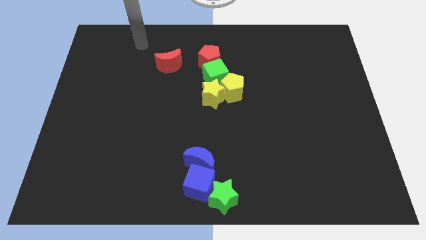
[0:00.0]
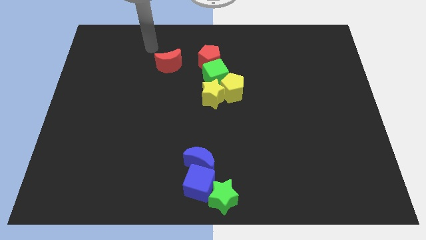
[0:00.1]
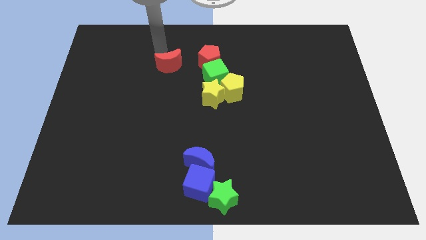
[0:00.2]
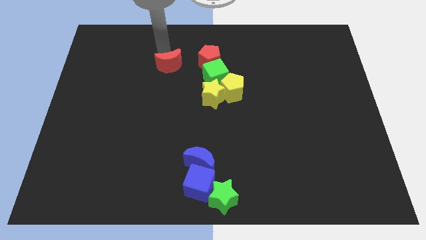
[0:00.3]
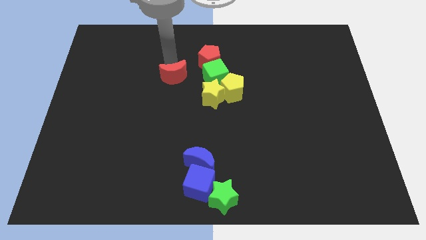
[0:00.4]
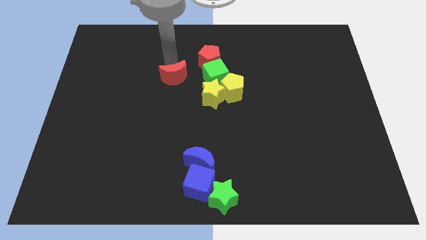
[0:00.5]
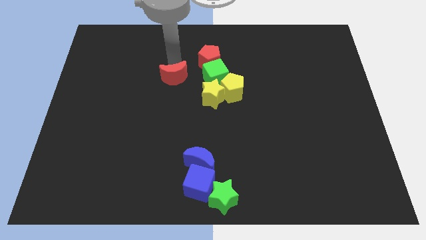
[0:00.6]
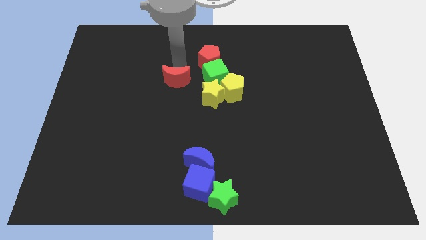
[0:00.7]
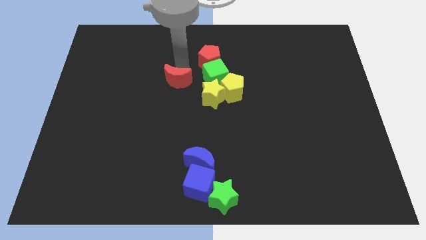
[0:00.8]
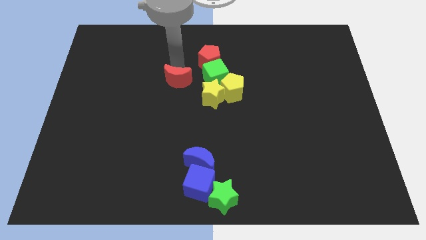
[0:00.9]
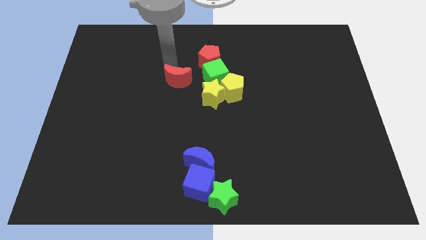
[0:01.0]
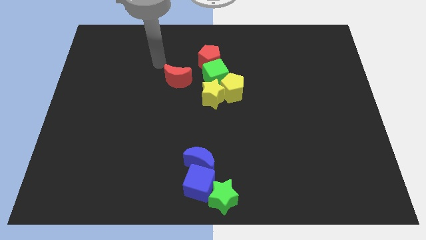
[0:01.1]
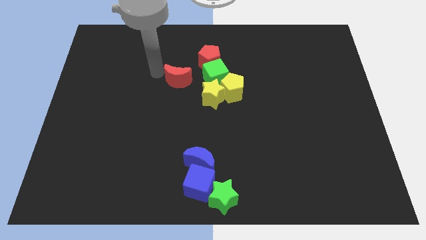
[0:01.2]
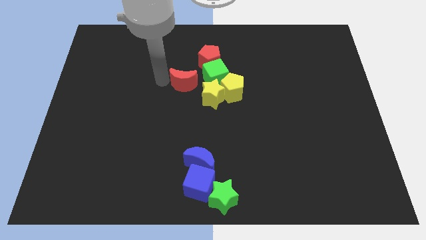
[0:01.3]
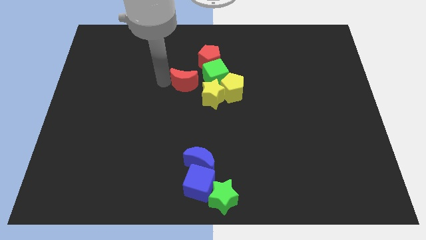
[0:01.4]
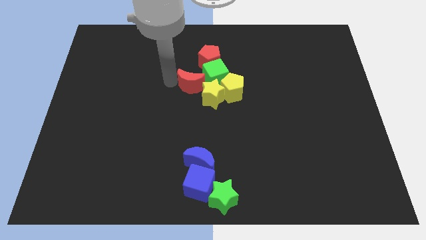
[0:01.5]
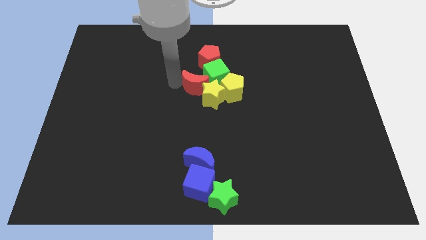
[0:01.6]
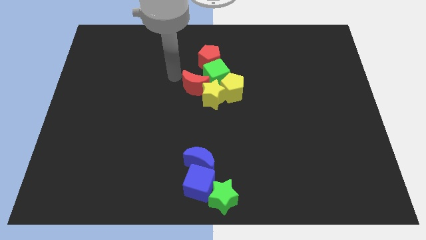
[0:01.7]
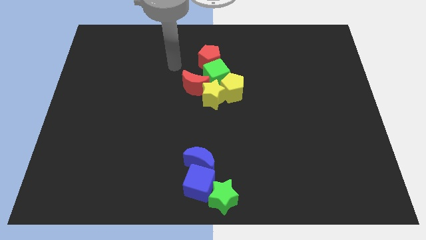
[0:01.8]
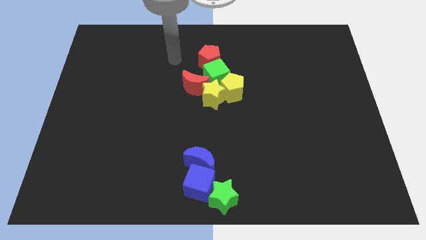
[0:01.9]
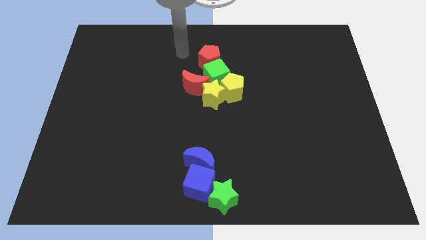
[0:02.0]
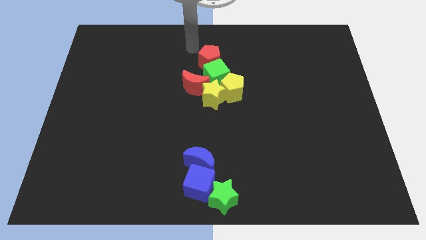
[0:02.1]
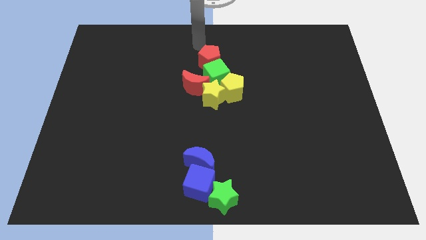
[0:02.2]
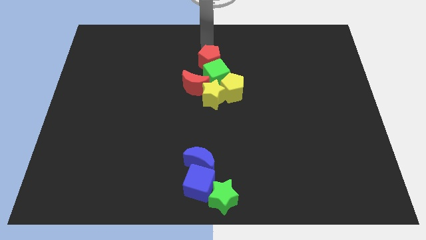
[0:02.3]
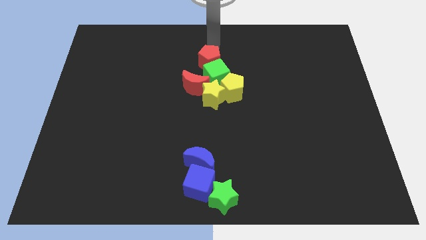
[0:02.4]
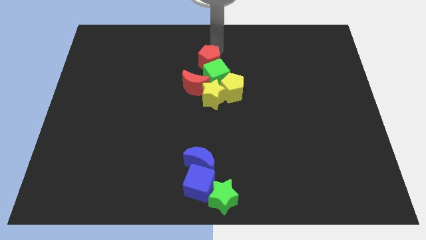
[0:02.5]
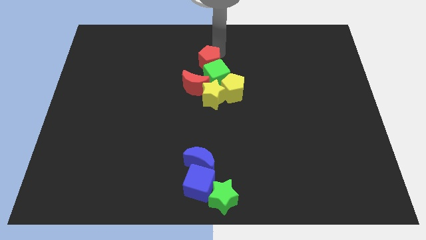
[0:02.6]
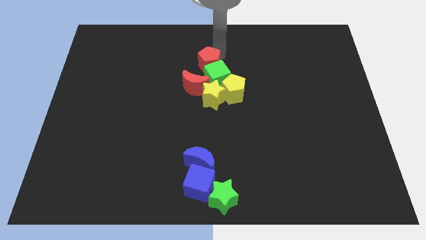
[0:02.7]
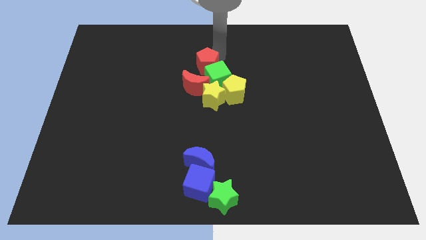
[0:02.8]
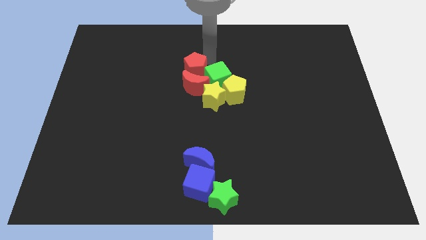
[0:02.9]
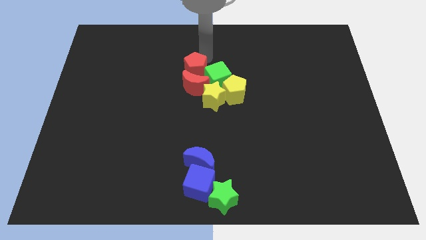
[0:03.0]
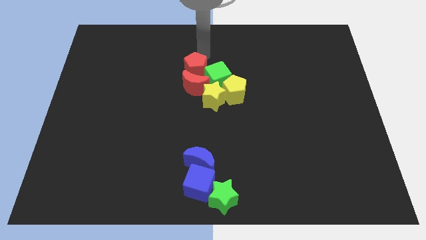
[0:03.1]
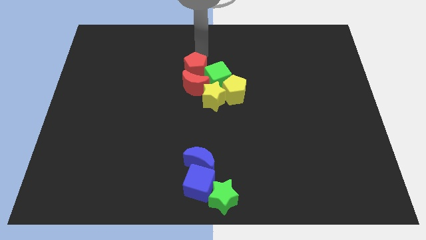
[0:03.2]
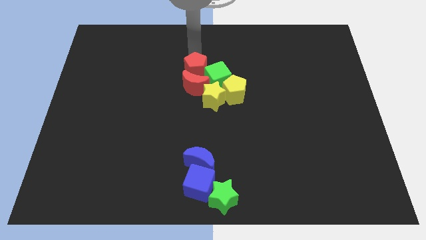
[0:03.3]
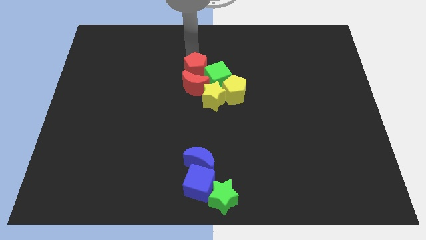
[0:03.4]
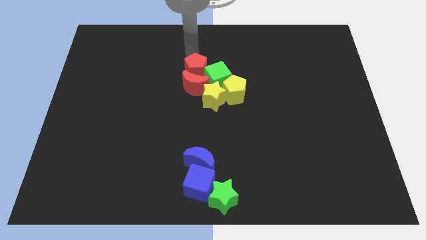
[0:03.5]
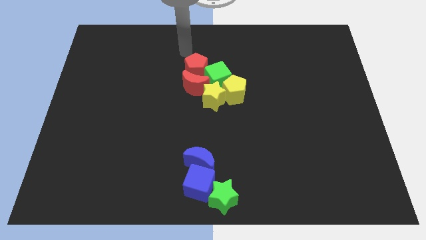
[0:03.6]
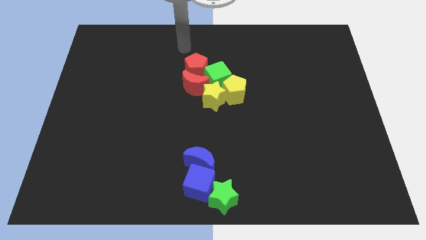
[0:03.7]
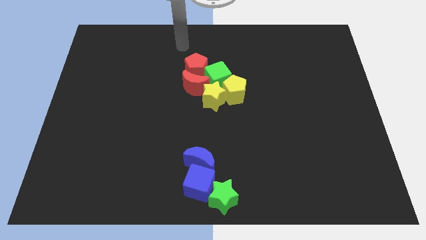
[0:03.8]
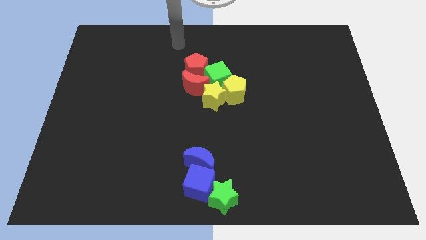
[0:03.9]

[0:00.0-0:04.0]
move the red blocks into the green cube

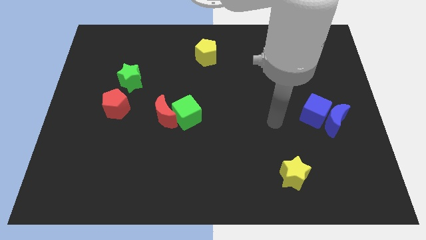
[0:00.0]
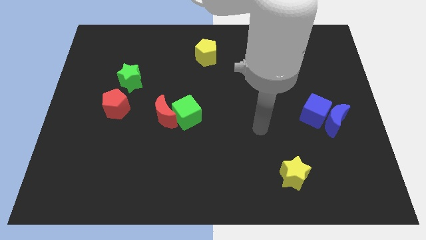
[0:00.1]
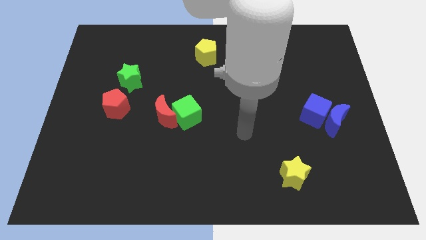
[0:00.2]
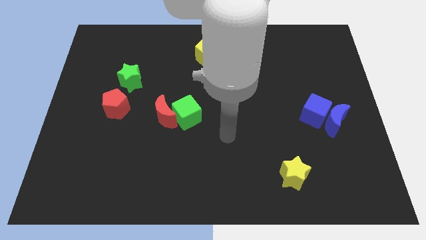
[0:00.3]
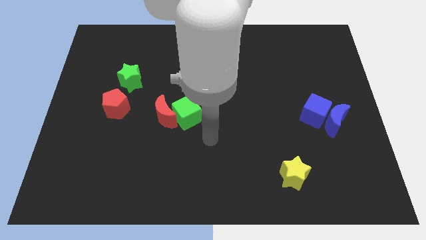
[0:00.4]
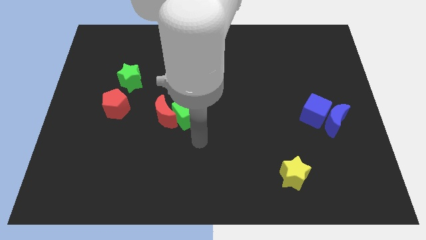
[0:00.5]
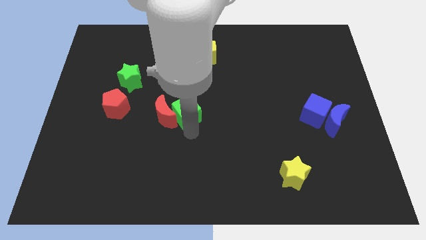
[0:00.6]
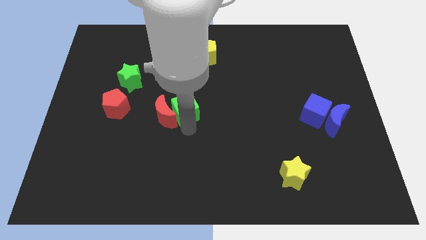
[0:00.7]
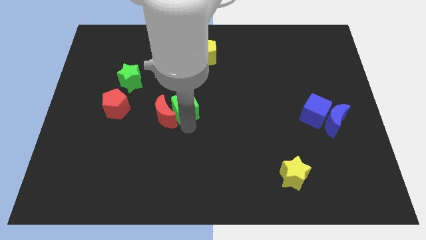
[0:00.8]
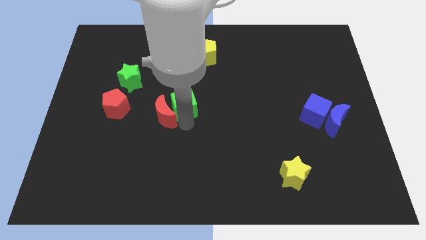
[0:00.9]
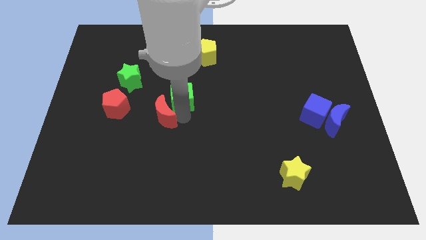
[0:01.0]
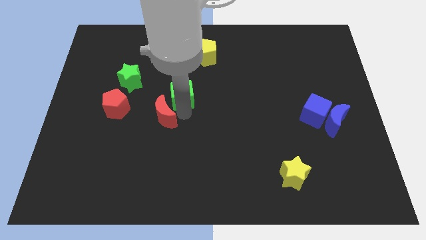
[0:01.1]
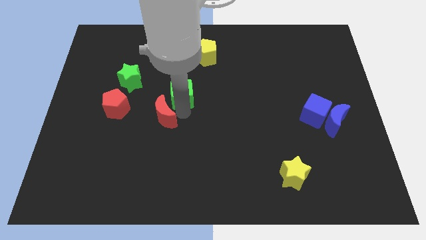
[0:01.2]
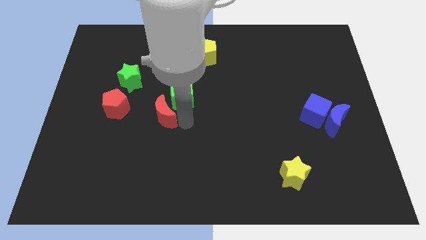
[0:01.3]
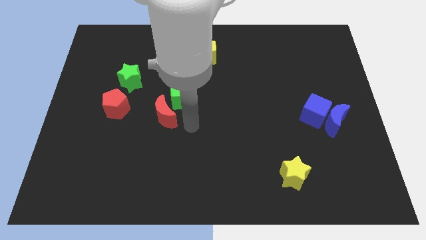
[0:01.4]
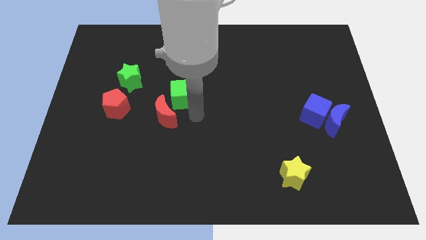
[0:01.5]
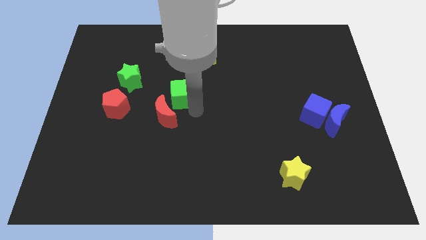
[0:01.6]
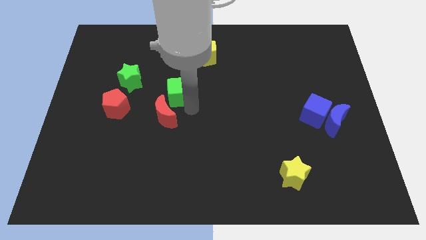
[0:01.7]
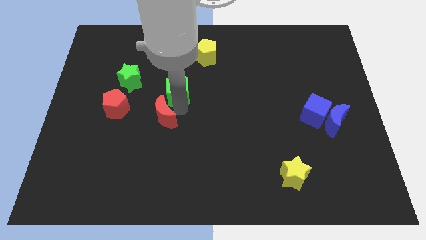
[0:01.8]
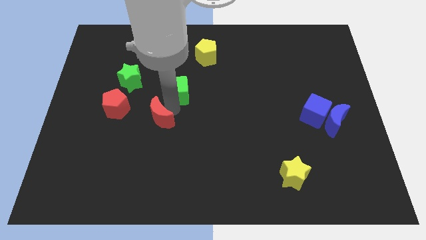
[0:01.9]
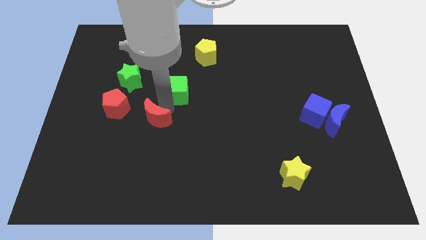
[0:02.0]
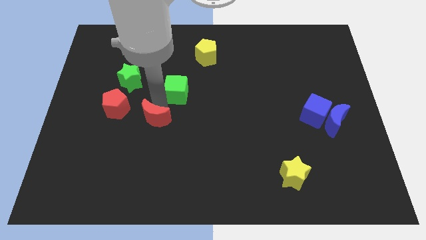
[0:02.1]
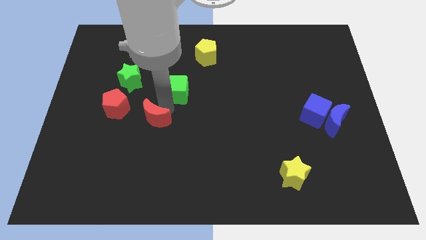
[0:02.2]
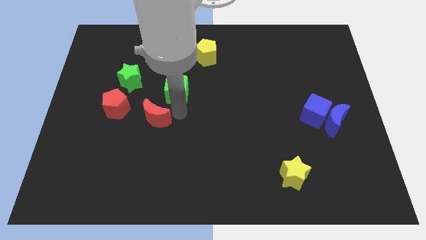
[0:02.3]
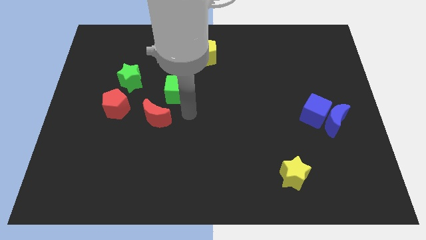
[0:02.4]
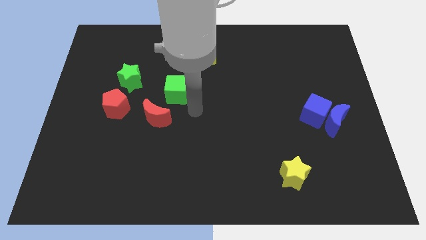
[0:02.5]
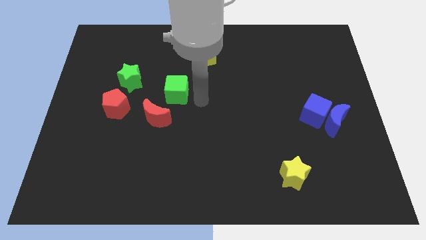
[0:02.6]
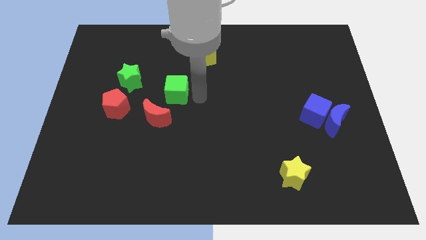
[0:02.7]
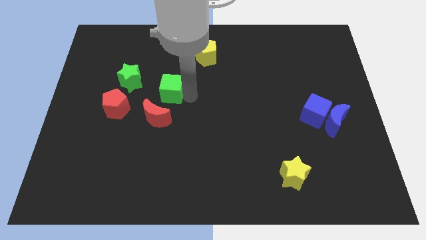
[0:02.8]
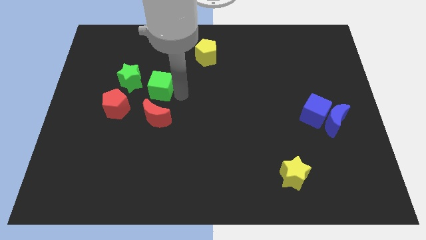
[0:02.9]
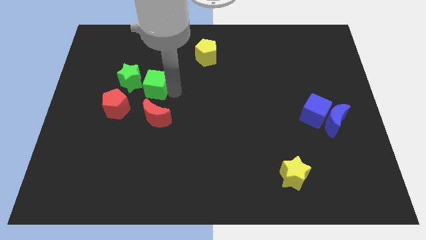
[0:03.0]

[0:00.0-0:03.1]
separate the green cube and red moon

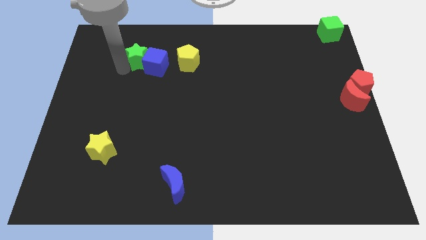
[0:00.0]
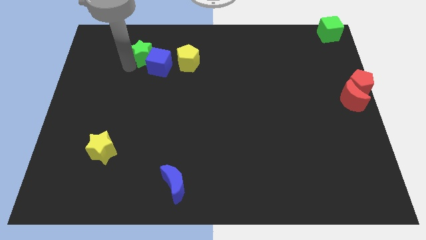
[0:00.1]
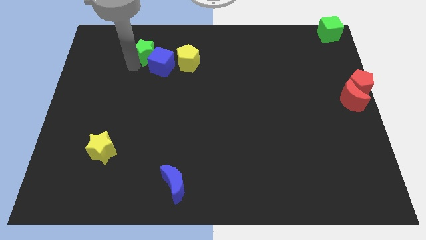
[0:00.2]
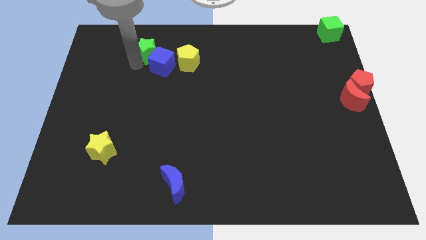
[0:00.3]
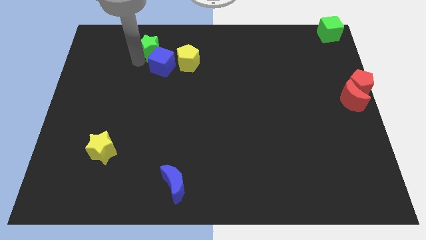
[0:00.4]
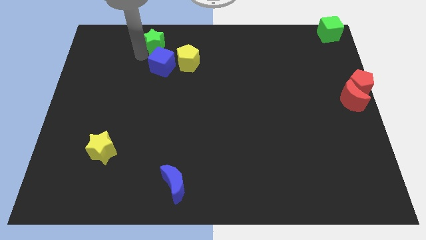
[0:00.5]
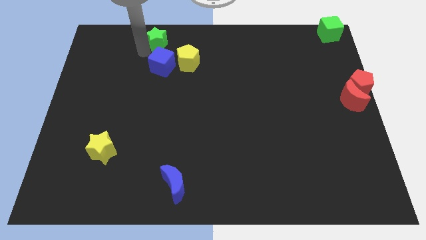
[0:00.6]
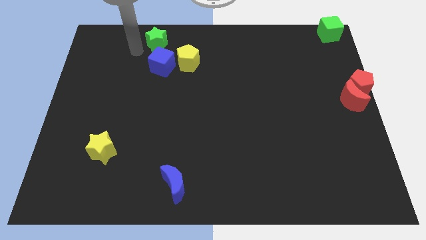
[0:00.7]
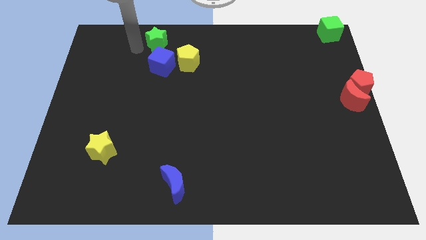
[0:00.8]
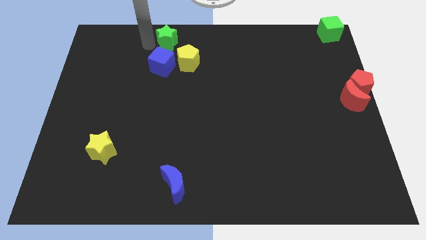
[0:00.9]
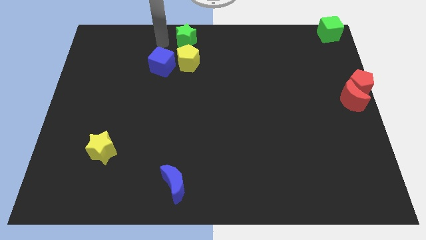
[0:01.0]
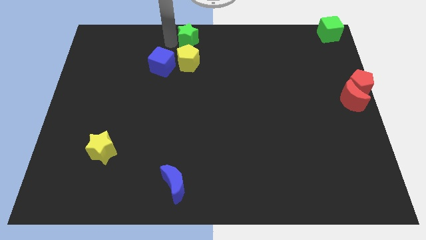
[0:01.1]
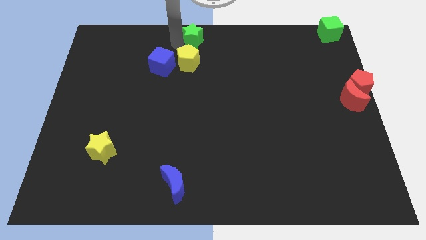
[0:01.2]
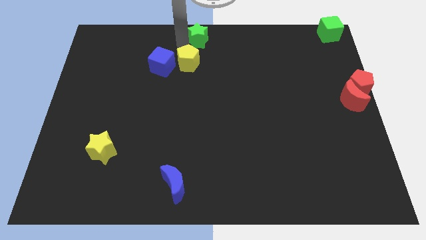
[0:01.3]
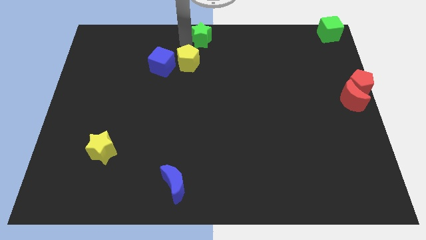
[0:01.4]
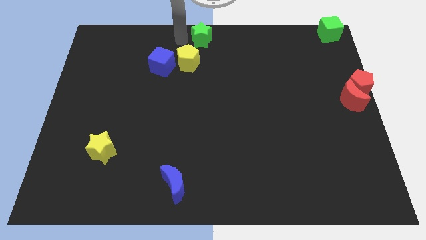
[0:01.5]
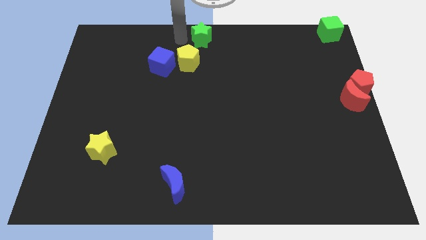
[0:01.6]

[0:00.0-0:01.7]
slide the green star to the top center
